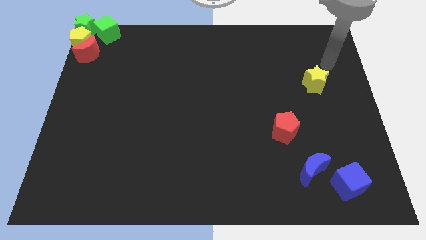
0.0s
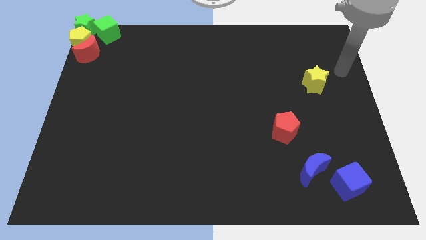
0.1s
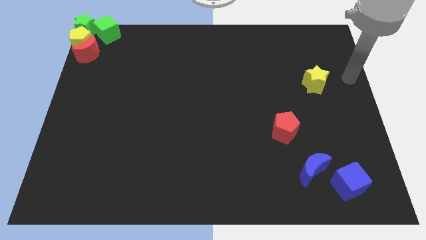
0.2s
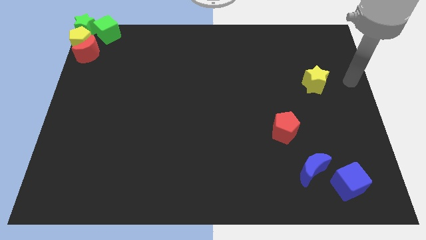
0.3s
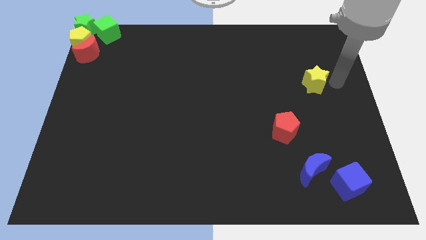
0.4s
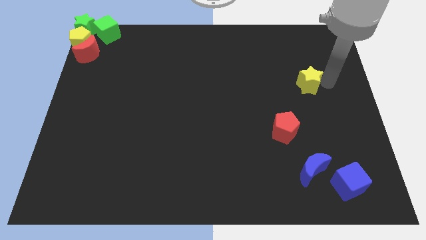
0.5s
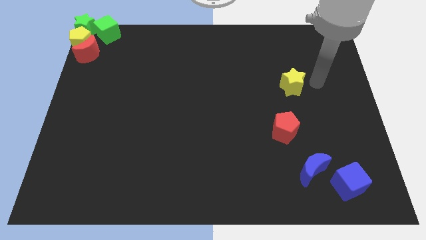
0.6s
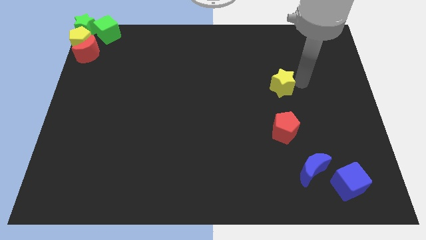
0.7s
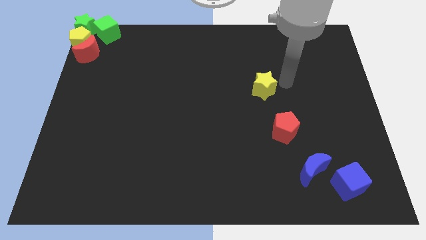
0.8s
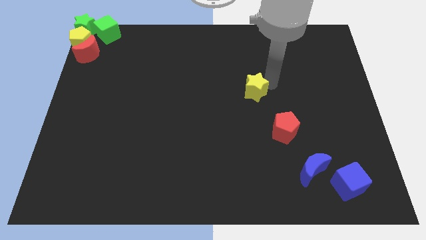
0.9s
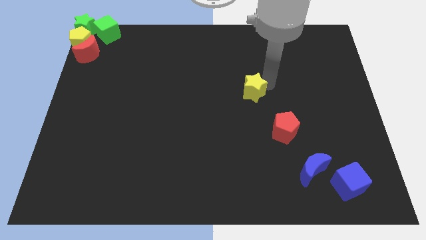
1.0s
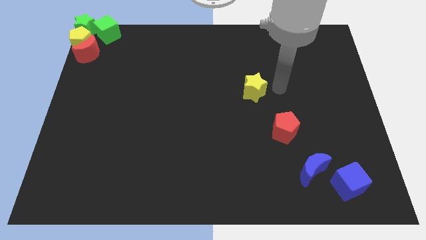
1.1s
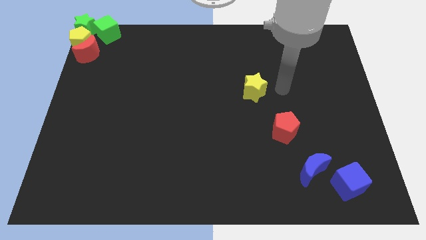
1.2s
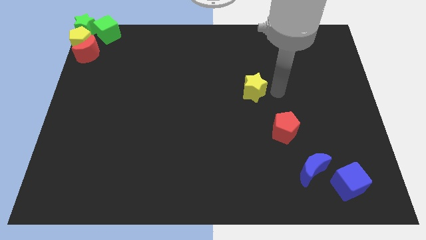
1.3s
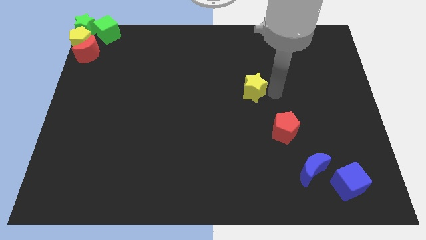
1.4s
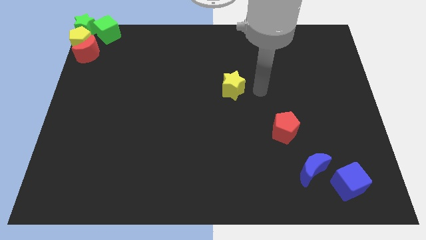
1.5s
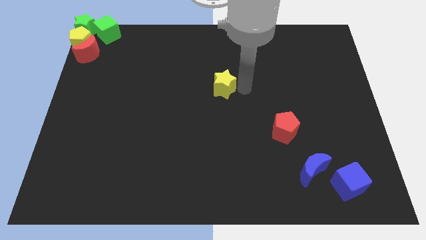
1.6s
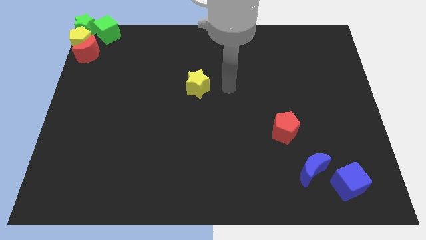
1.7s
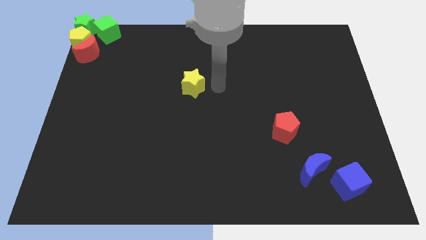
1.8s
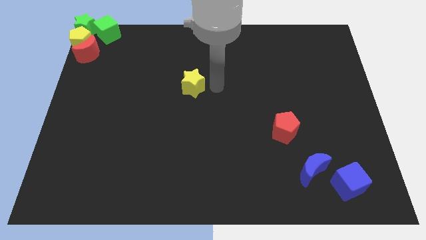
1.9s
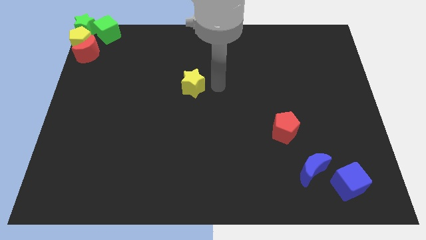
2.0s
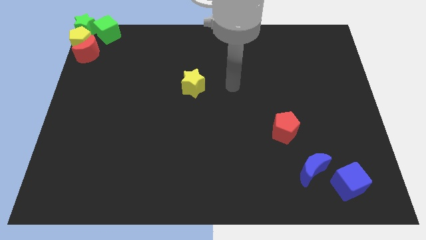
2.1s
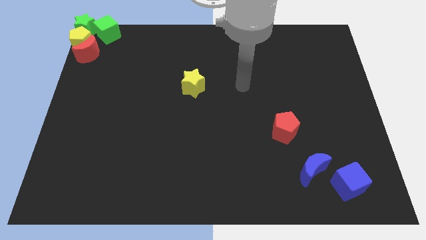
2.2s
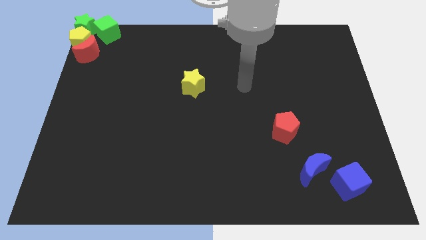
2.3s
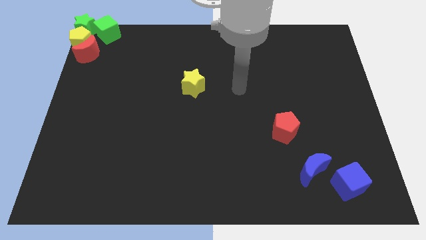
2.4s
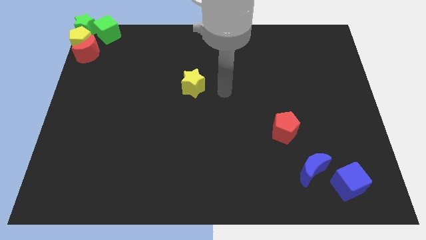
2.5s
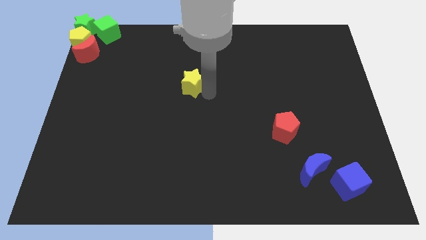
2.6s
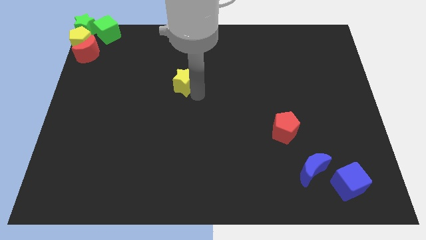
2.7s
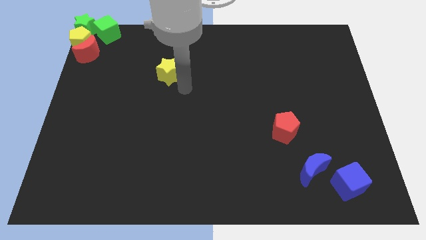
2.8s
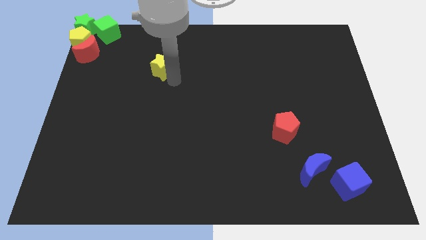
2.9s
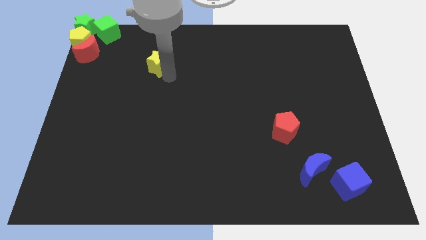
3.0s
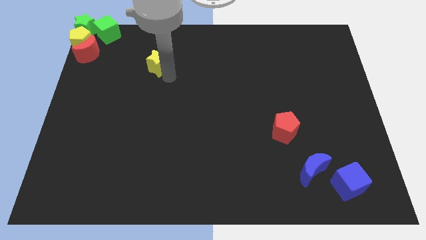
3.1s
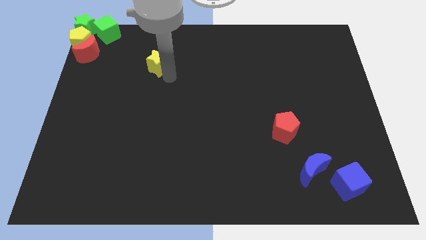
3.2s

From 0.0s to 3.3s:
move the yellow star diagonally top left to the red pentagon

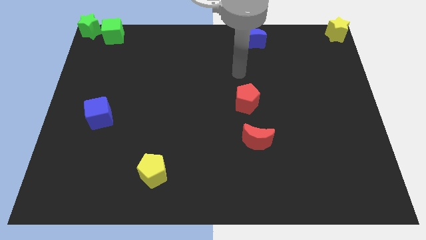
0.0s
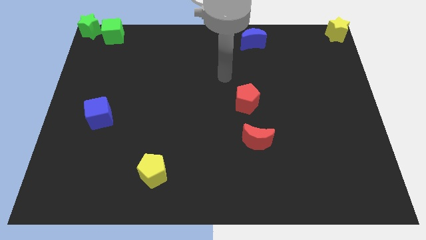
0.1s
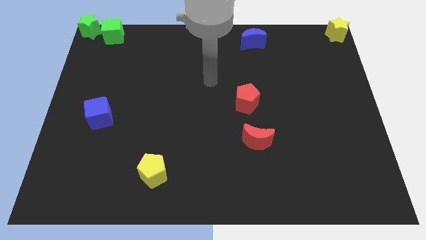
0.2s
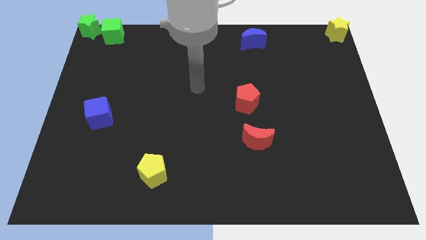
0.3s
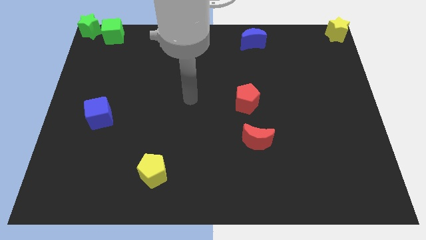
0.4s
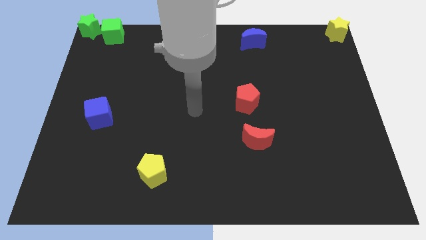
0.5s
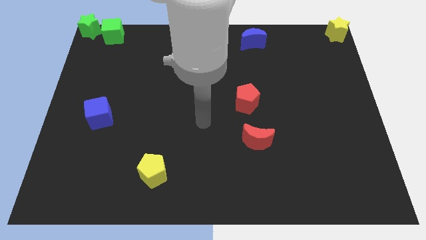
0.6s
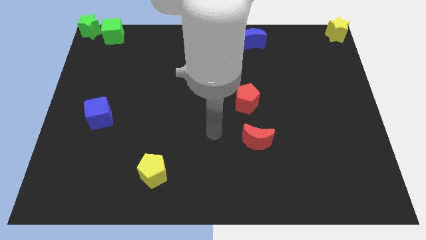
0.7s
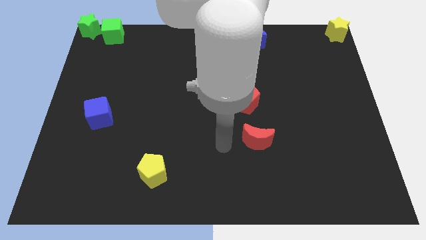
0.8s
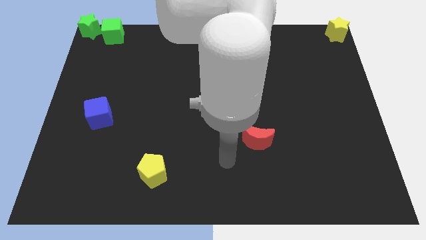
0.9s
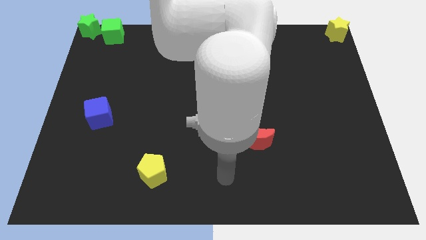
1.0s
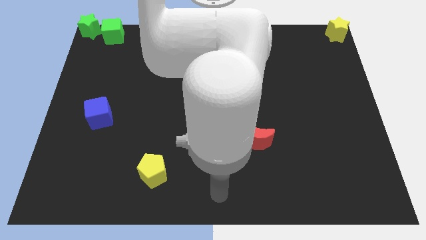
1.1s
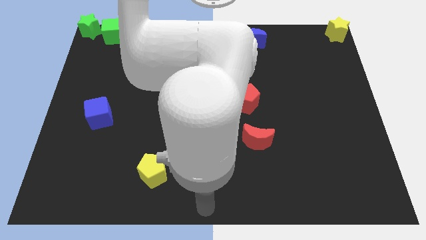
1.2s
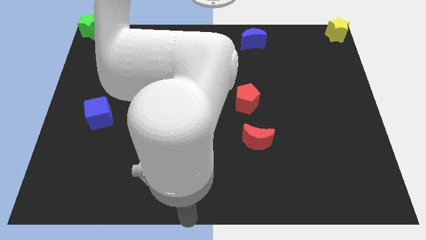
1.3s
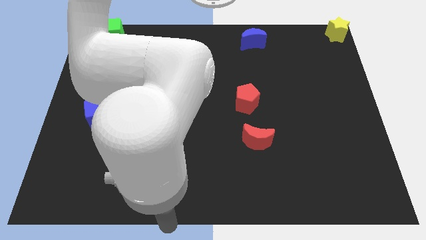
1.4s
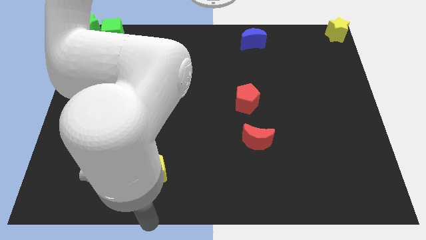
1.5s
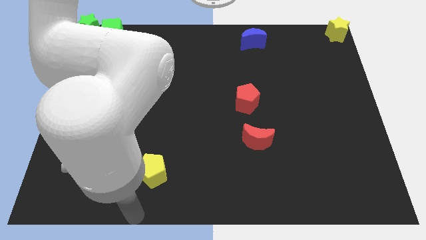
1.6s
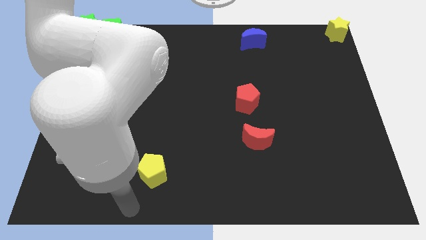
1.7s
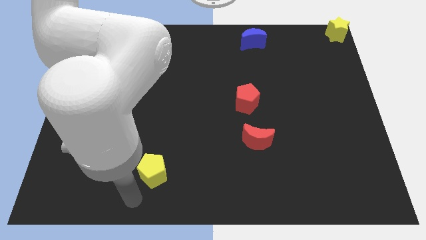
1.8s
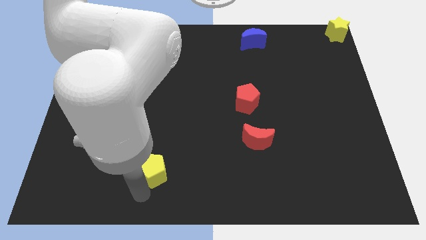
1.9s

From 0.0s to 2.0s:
put your hand vertically below the yellow pentagon

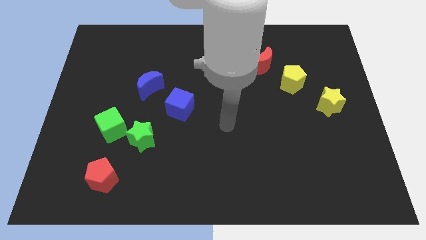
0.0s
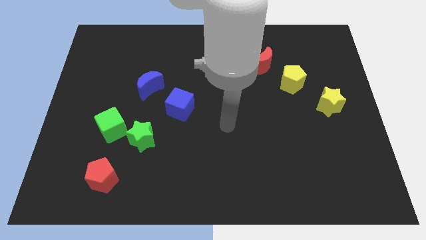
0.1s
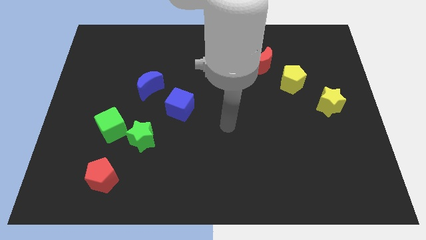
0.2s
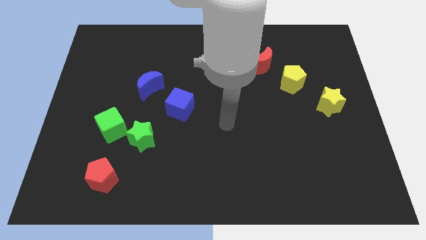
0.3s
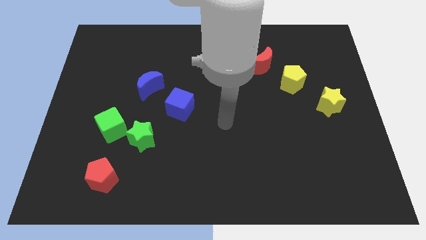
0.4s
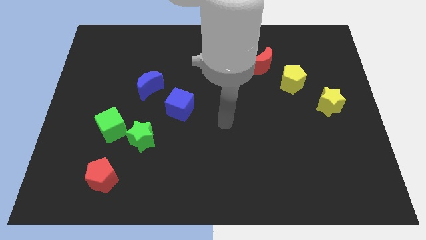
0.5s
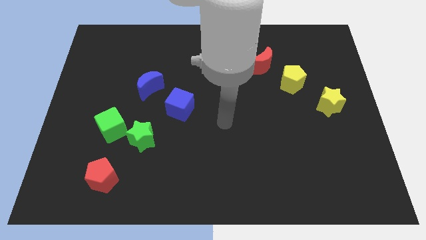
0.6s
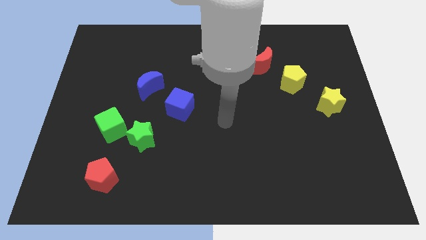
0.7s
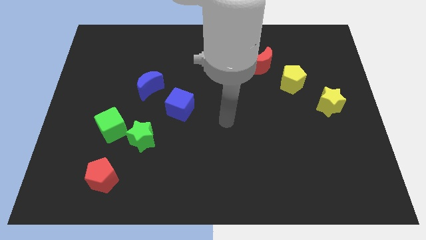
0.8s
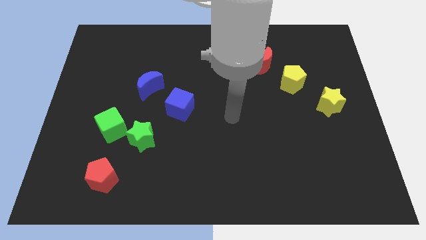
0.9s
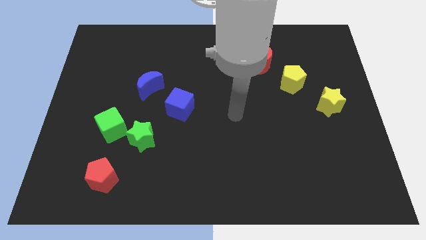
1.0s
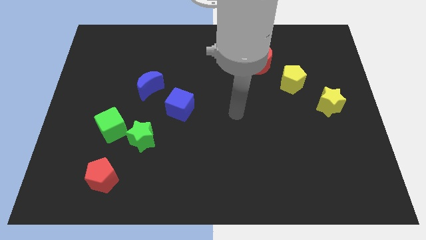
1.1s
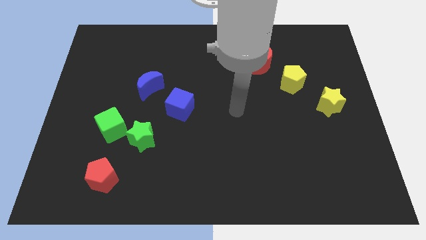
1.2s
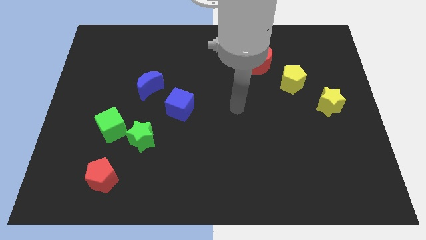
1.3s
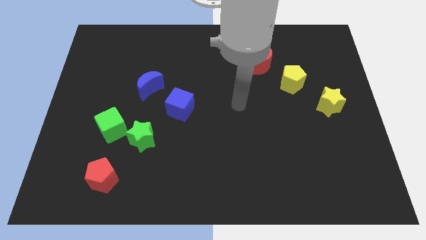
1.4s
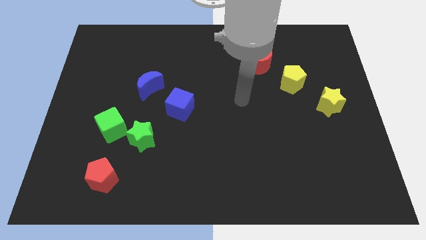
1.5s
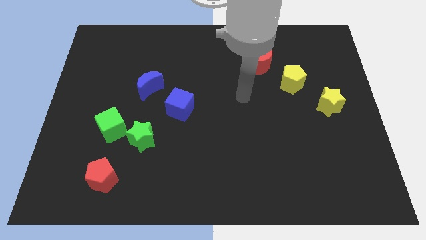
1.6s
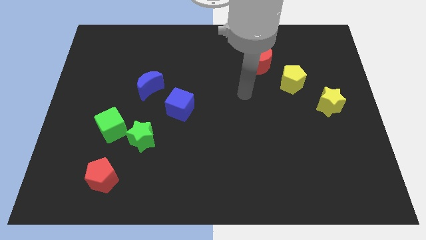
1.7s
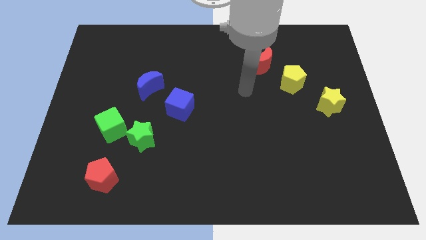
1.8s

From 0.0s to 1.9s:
move your arm towards red moon

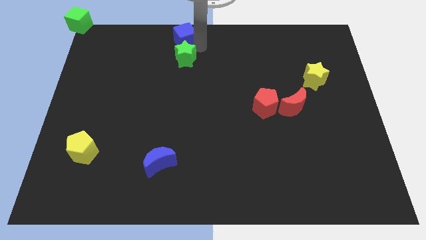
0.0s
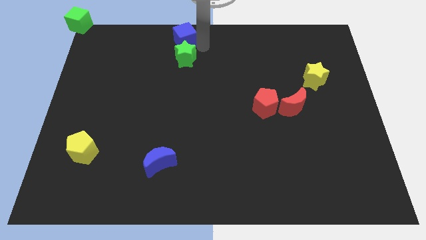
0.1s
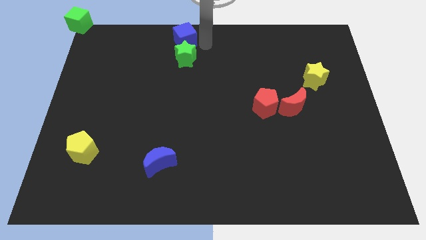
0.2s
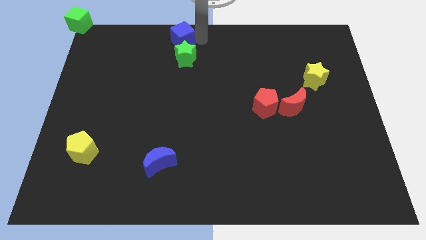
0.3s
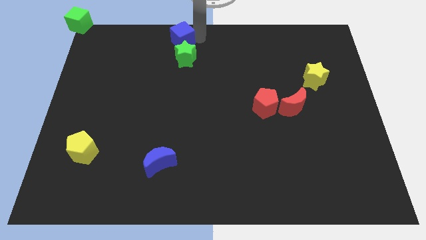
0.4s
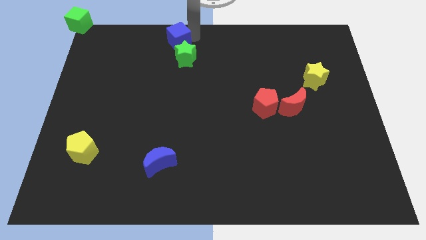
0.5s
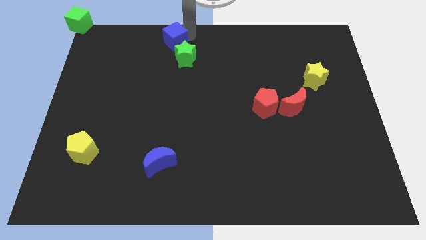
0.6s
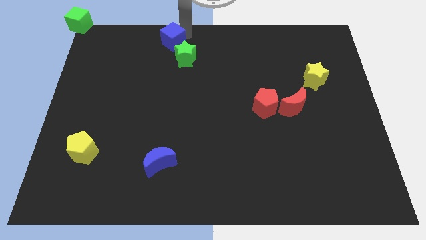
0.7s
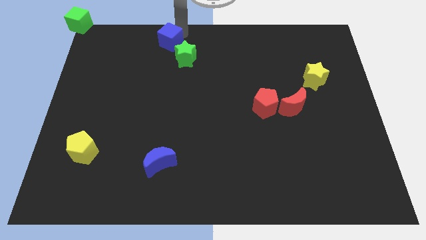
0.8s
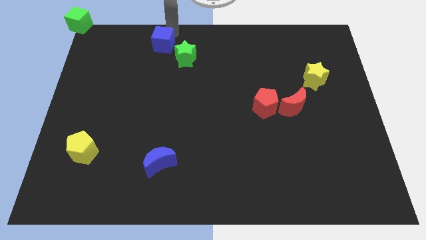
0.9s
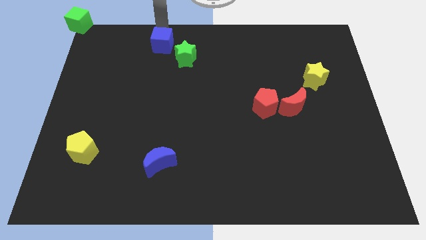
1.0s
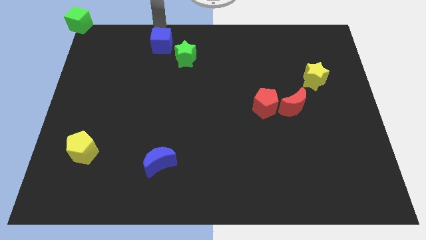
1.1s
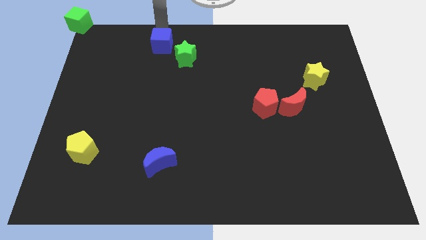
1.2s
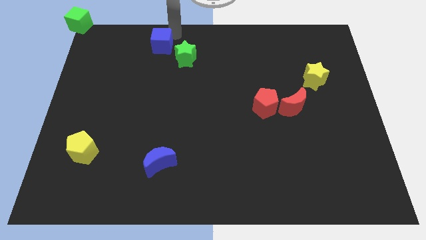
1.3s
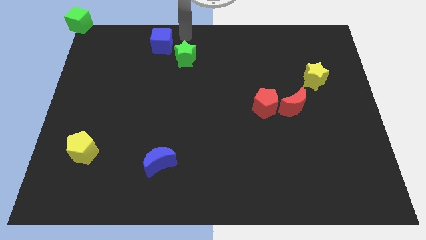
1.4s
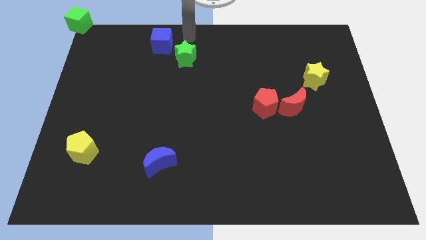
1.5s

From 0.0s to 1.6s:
move the blue cube to the top left of the green star
